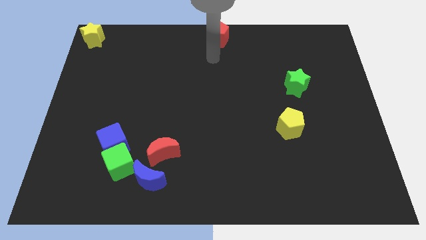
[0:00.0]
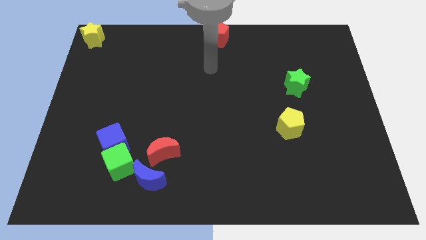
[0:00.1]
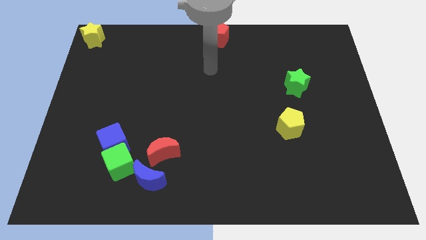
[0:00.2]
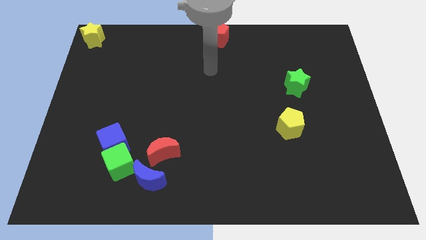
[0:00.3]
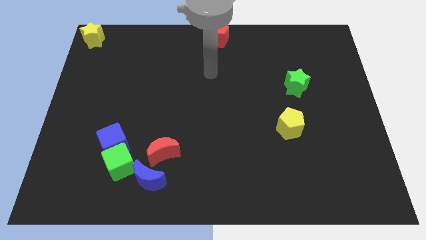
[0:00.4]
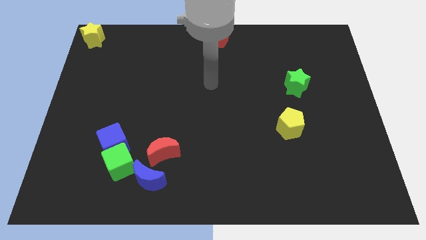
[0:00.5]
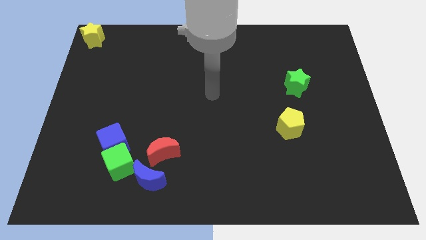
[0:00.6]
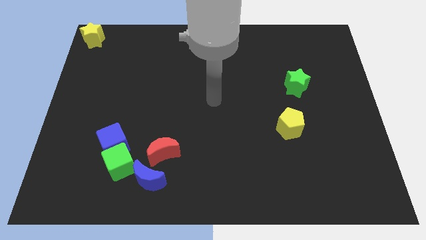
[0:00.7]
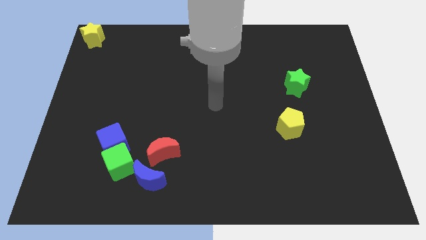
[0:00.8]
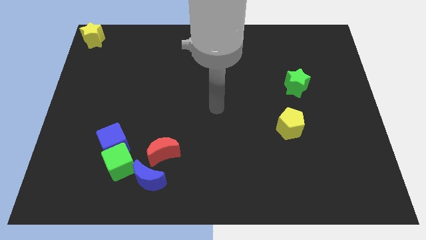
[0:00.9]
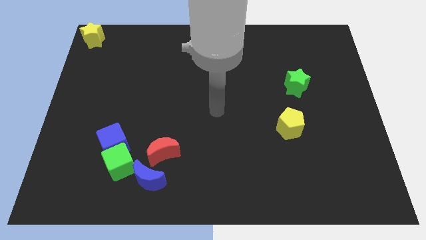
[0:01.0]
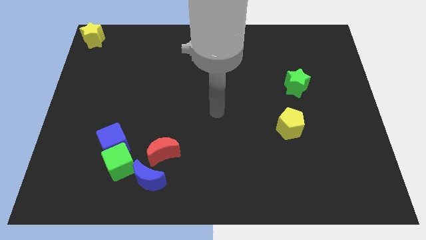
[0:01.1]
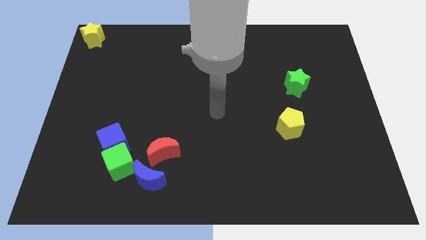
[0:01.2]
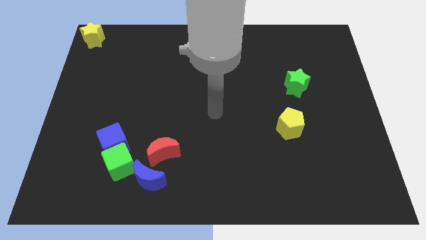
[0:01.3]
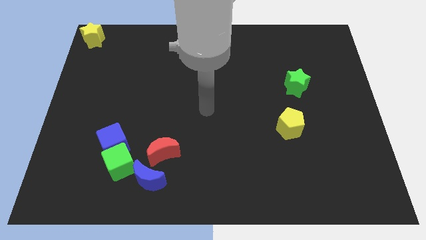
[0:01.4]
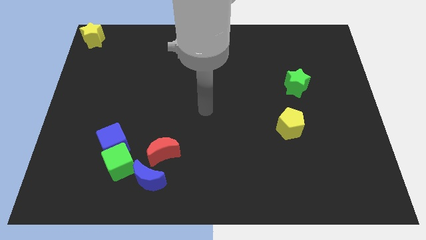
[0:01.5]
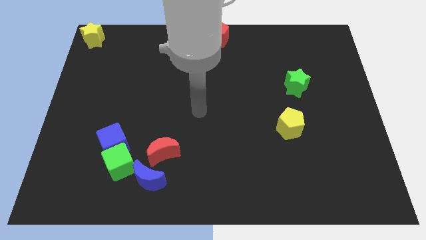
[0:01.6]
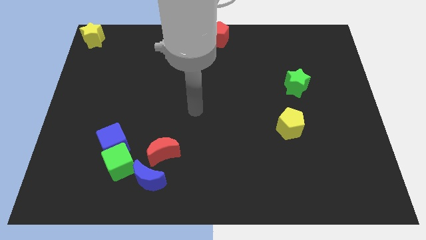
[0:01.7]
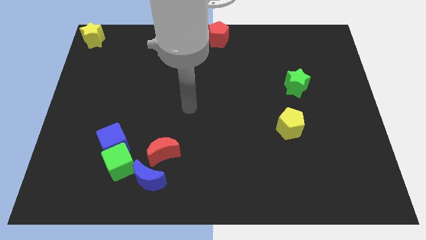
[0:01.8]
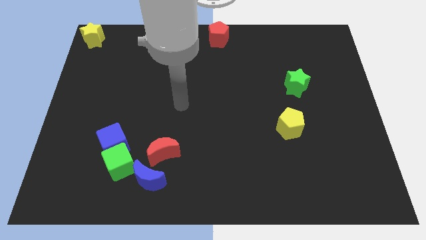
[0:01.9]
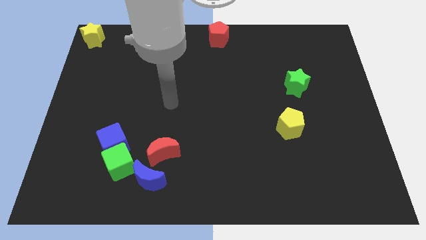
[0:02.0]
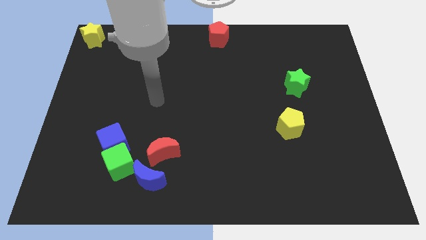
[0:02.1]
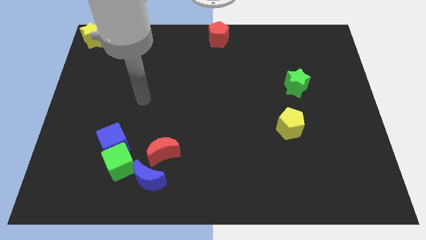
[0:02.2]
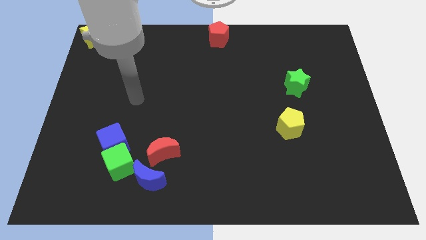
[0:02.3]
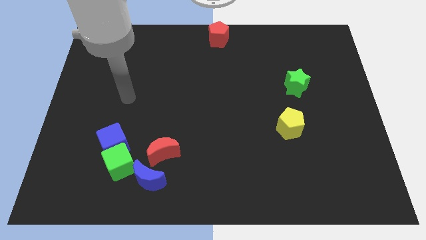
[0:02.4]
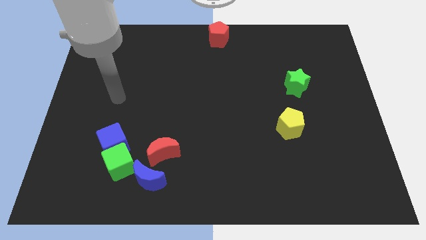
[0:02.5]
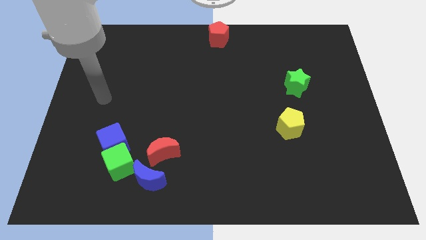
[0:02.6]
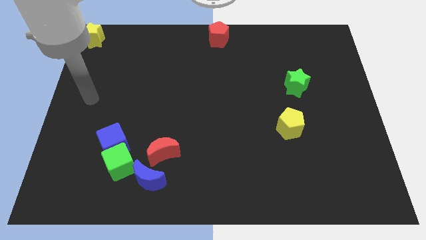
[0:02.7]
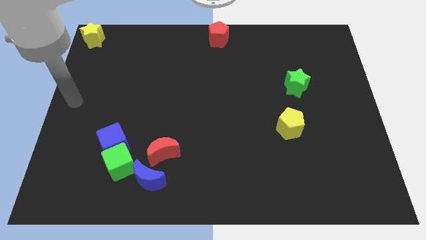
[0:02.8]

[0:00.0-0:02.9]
point your arm to the left center of the board

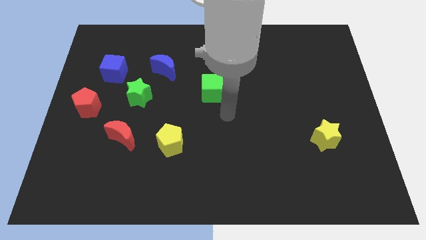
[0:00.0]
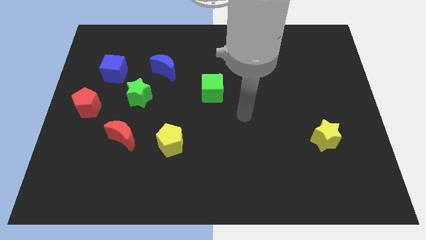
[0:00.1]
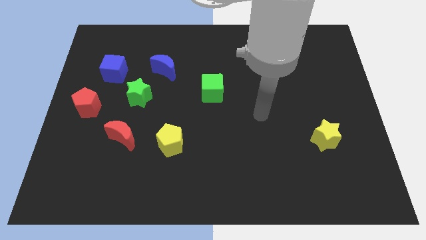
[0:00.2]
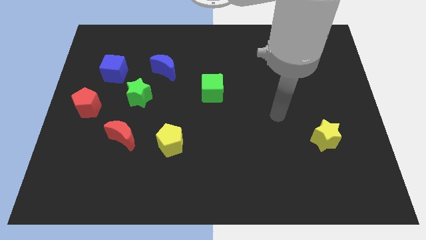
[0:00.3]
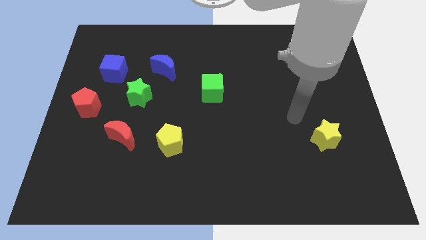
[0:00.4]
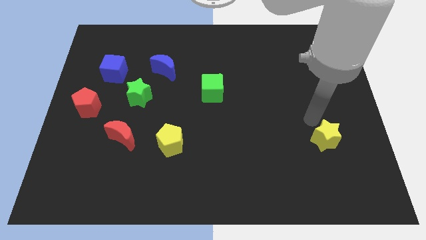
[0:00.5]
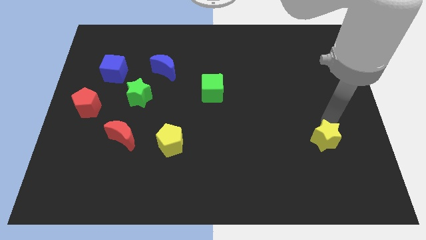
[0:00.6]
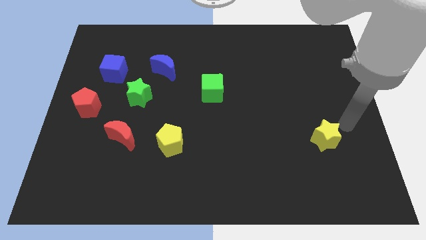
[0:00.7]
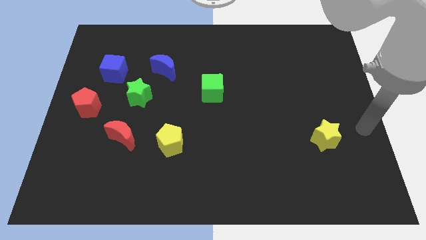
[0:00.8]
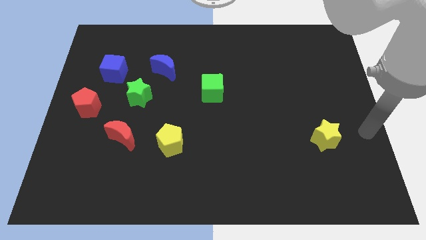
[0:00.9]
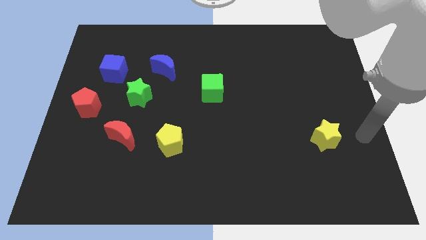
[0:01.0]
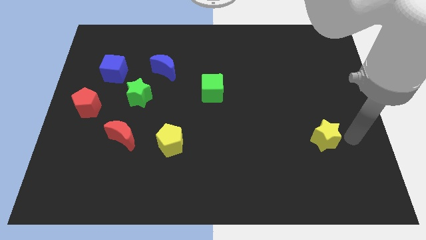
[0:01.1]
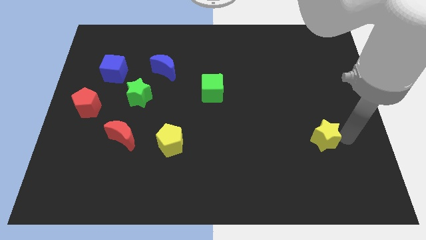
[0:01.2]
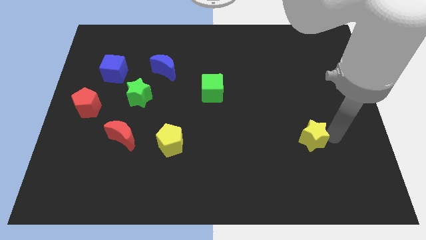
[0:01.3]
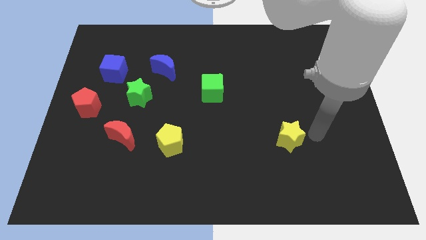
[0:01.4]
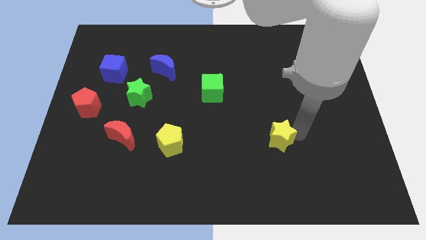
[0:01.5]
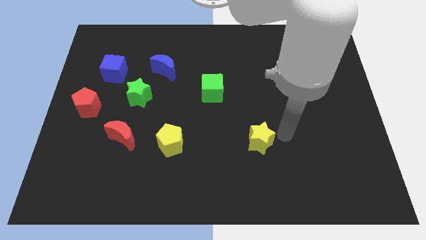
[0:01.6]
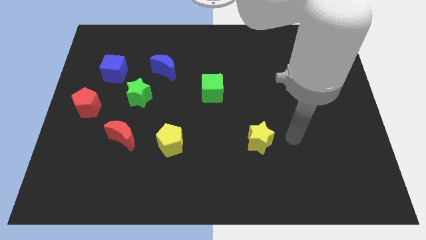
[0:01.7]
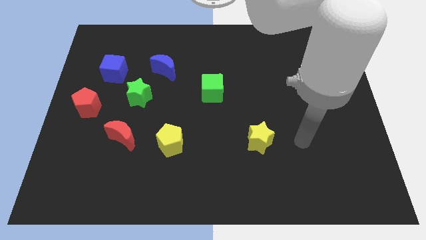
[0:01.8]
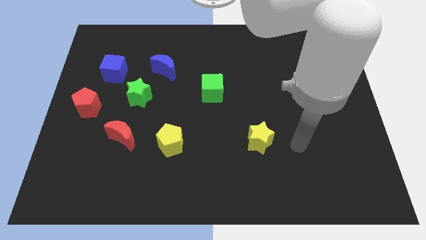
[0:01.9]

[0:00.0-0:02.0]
push the yellow star towards the left

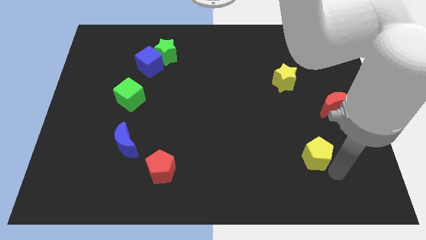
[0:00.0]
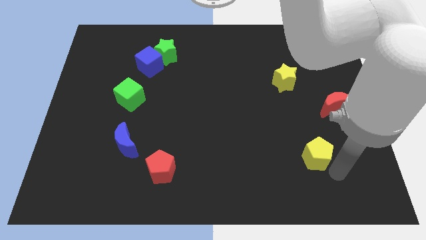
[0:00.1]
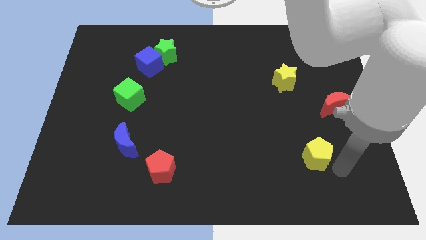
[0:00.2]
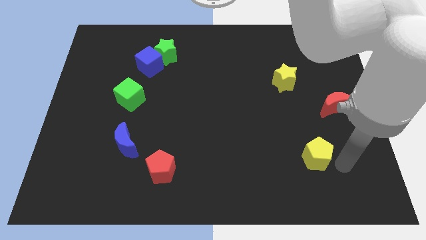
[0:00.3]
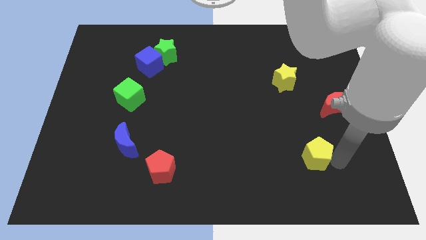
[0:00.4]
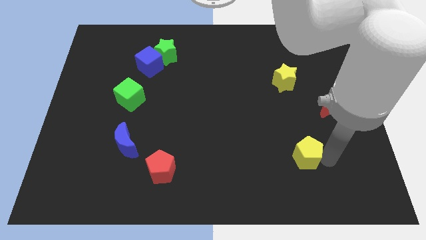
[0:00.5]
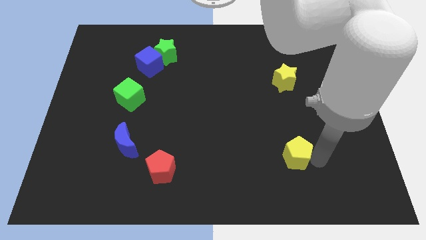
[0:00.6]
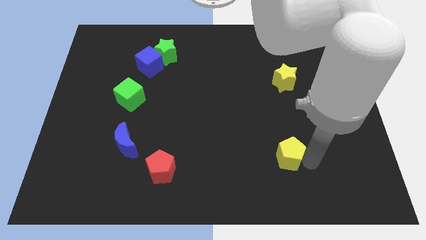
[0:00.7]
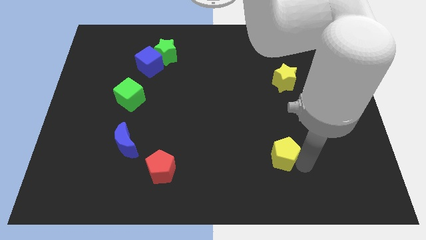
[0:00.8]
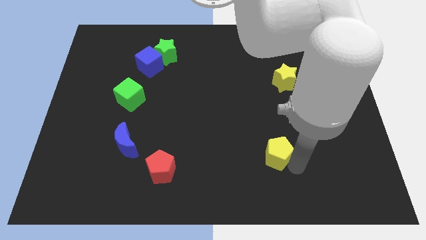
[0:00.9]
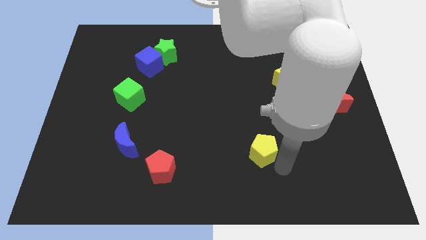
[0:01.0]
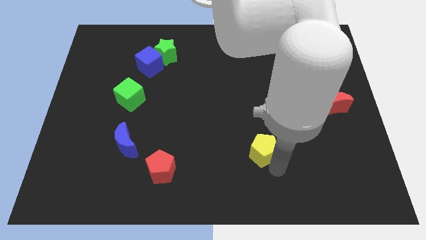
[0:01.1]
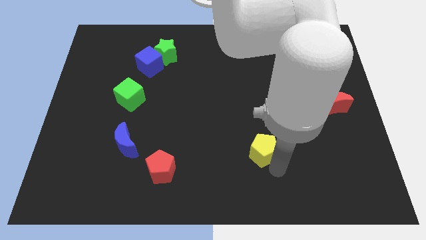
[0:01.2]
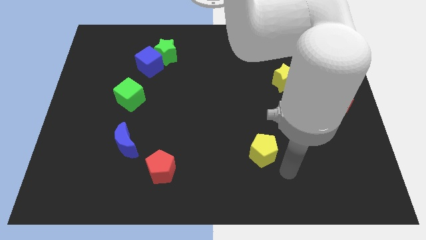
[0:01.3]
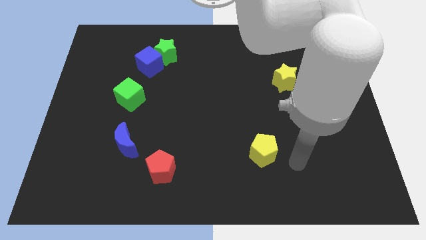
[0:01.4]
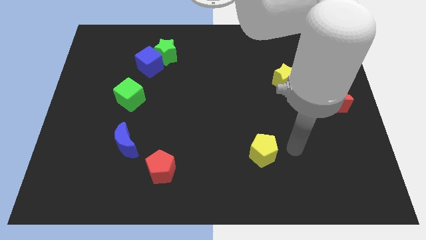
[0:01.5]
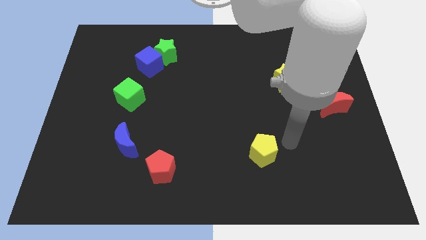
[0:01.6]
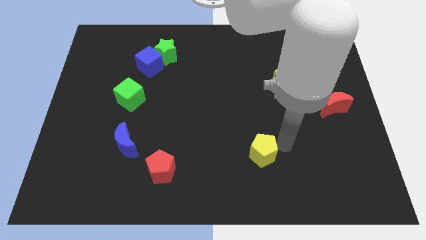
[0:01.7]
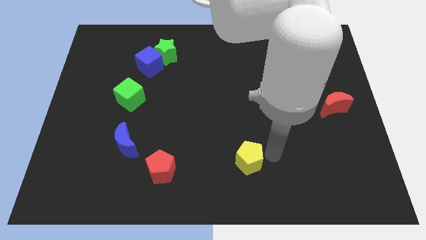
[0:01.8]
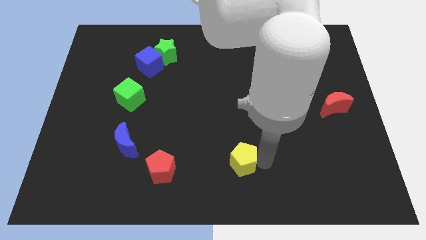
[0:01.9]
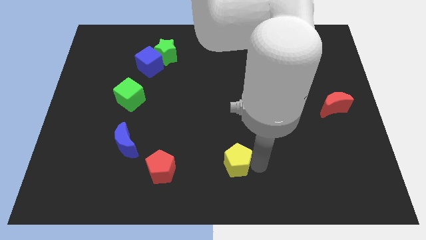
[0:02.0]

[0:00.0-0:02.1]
push the yellow pentagon towards the left side

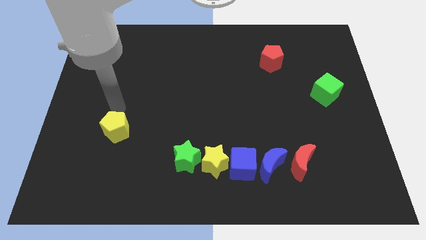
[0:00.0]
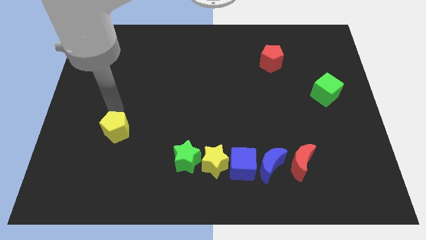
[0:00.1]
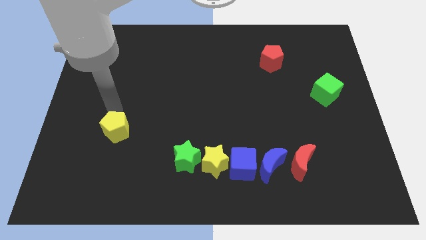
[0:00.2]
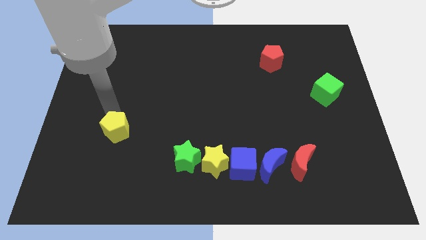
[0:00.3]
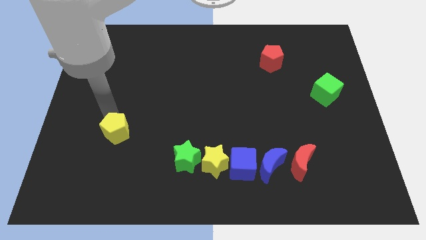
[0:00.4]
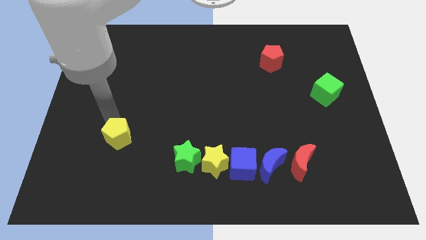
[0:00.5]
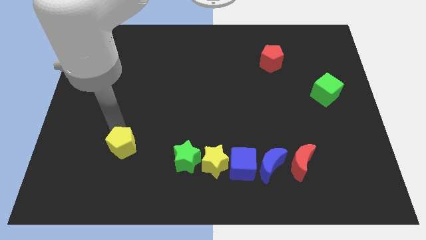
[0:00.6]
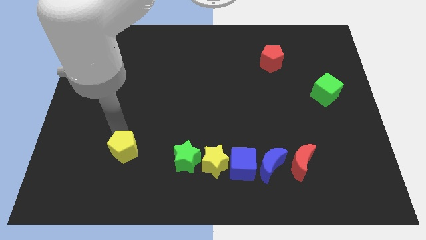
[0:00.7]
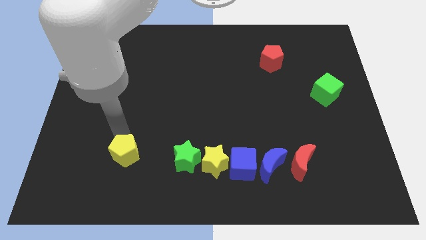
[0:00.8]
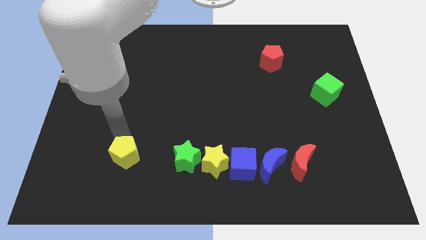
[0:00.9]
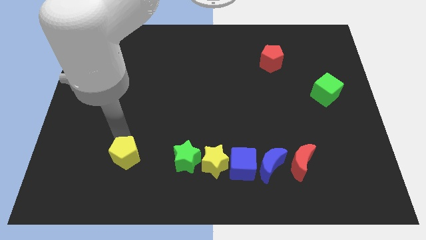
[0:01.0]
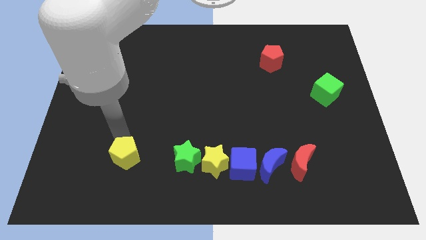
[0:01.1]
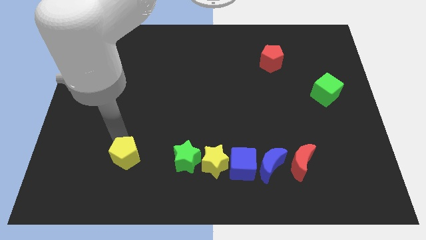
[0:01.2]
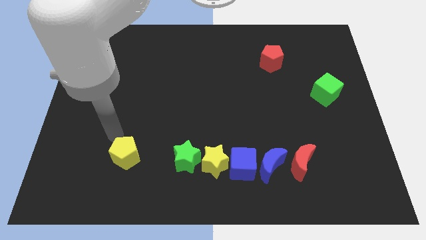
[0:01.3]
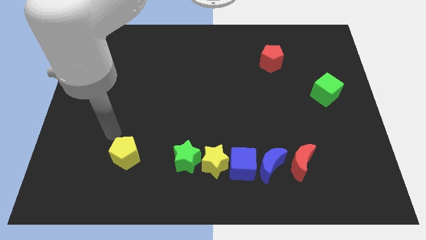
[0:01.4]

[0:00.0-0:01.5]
slightly push the yellow pentagon towards the bottom of the board

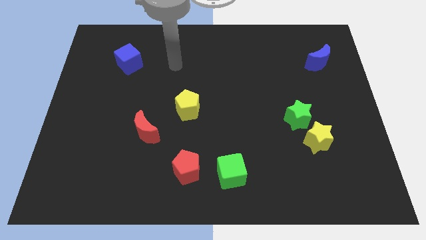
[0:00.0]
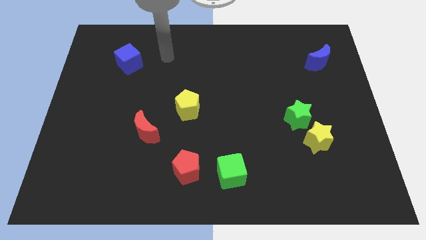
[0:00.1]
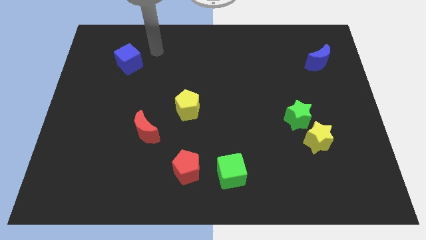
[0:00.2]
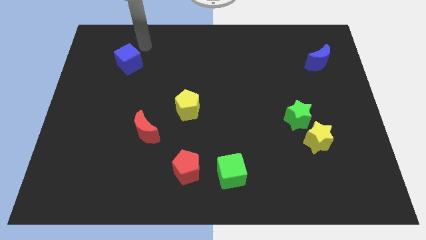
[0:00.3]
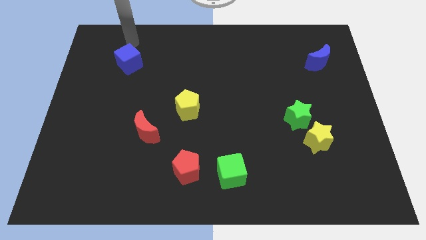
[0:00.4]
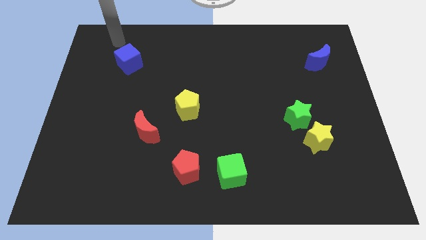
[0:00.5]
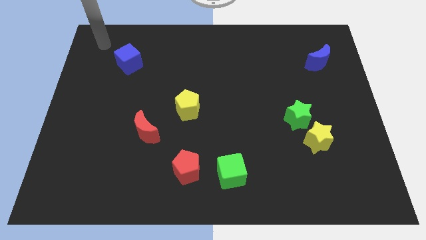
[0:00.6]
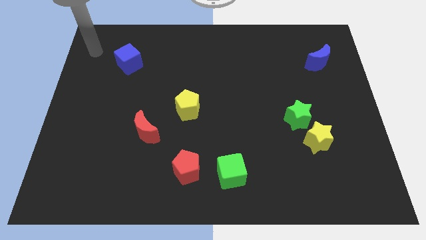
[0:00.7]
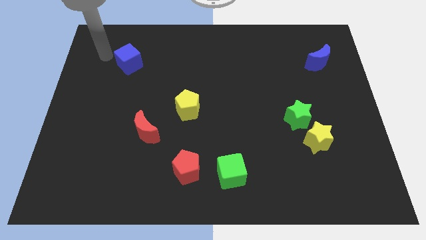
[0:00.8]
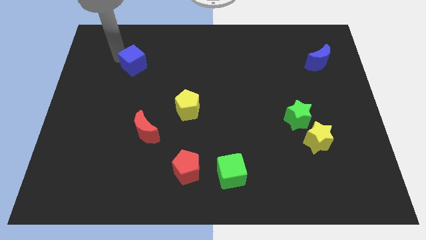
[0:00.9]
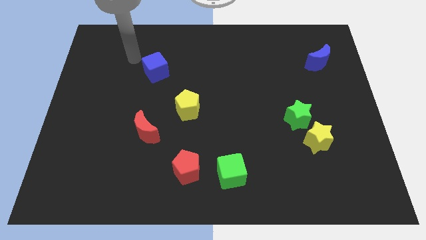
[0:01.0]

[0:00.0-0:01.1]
move your arm left to the blue cube
